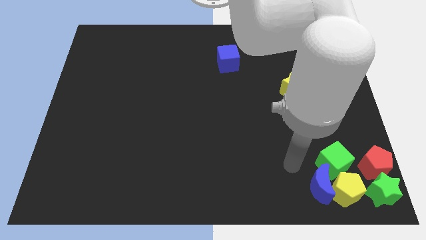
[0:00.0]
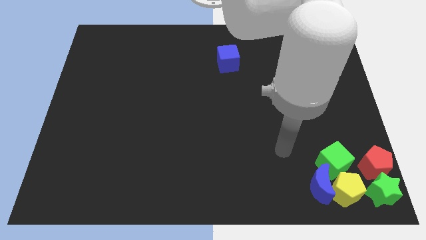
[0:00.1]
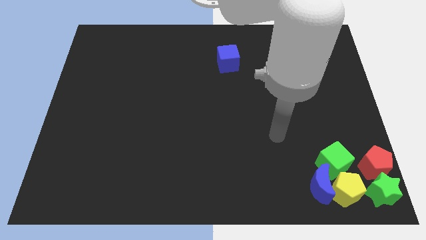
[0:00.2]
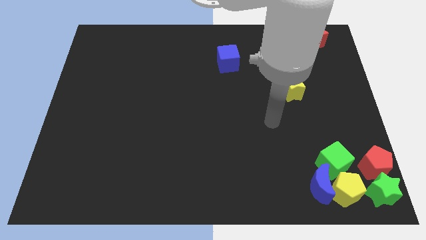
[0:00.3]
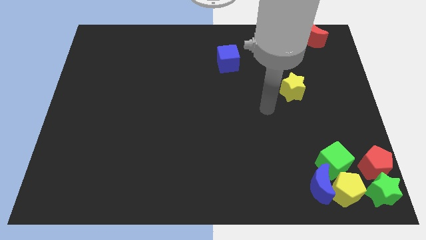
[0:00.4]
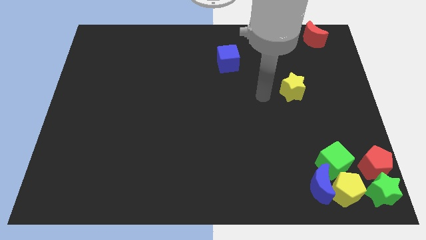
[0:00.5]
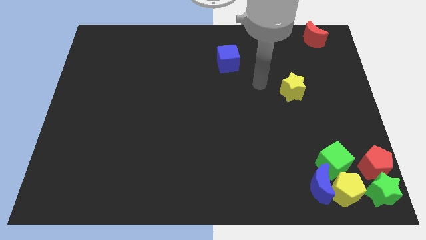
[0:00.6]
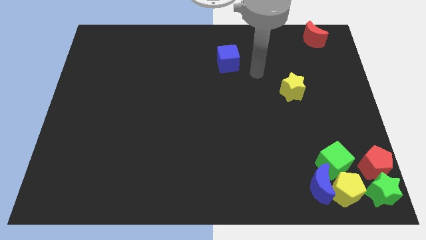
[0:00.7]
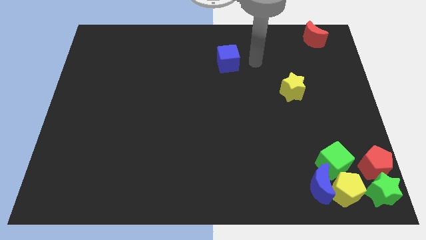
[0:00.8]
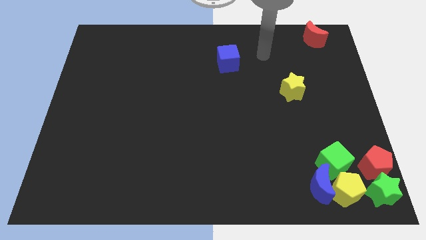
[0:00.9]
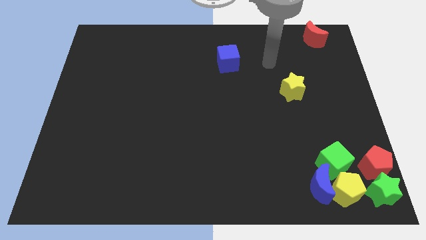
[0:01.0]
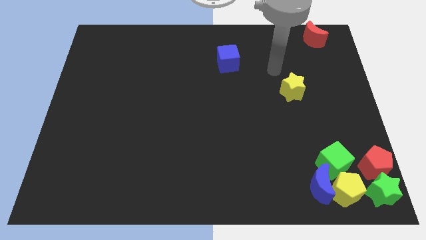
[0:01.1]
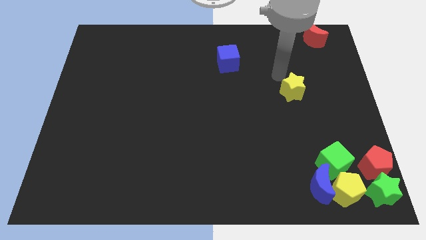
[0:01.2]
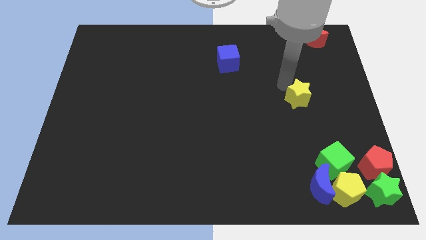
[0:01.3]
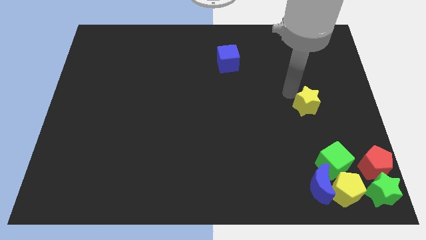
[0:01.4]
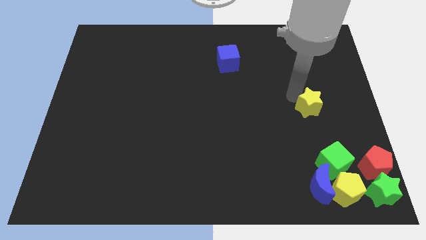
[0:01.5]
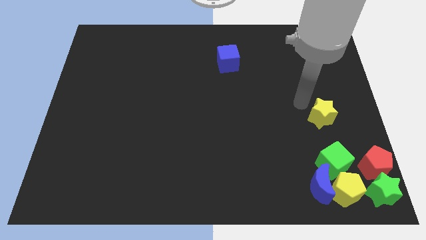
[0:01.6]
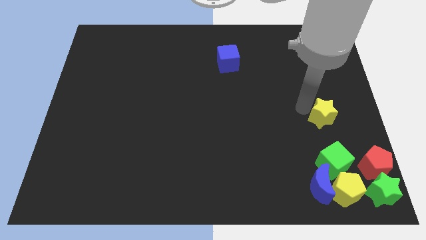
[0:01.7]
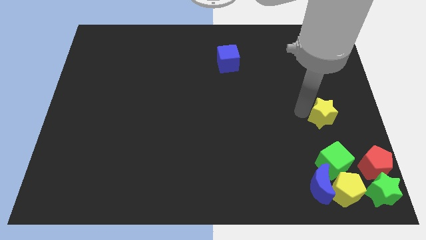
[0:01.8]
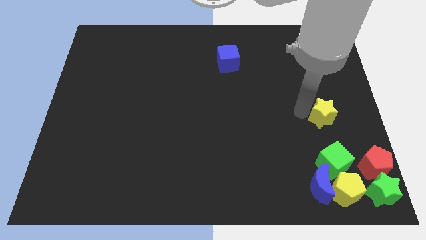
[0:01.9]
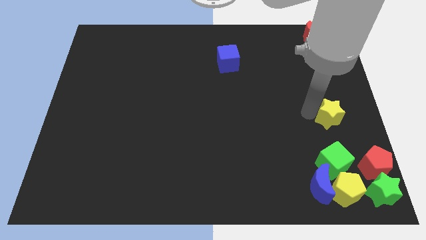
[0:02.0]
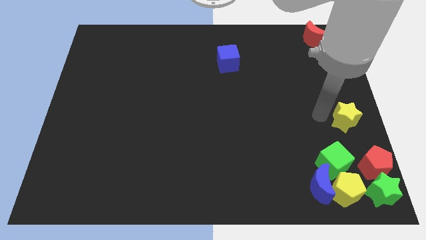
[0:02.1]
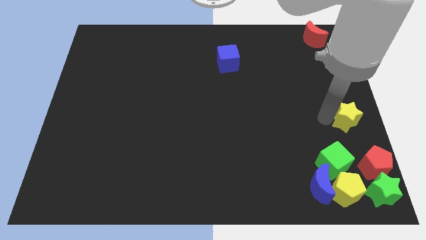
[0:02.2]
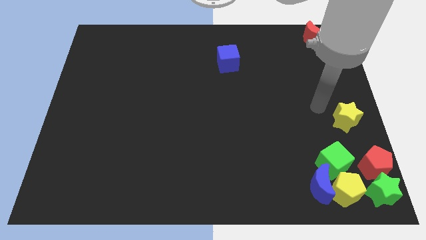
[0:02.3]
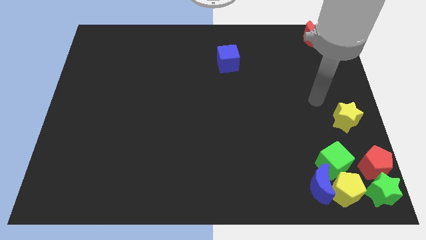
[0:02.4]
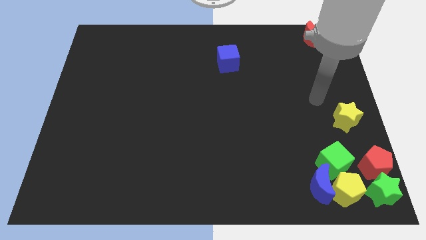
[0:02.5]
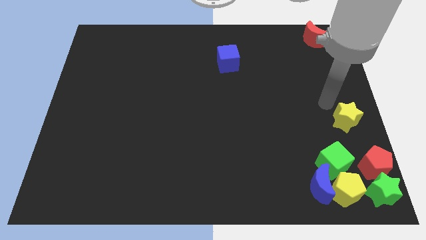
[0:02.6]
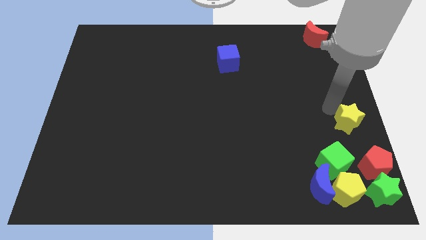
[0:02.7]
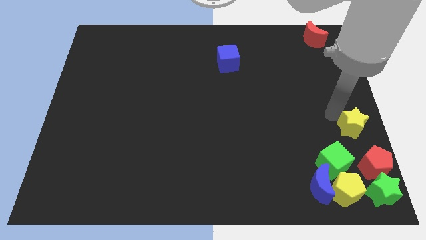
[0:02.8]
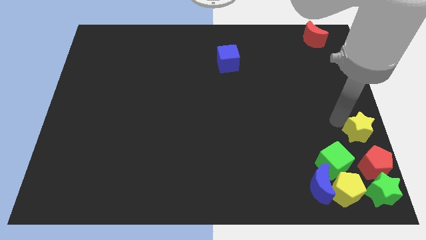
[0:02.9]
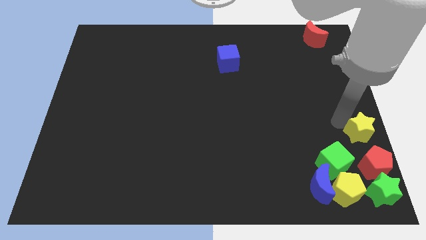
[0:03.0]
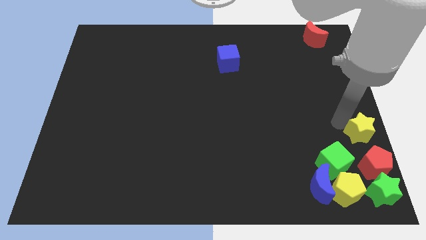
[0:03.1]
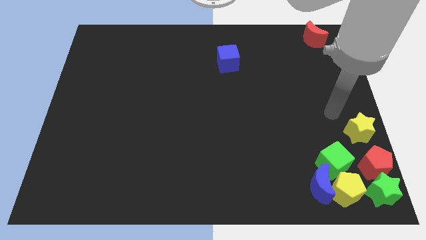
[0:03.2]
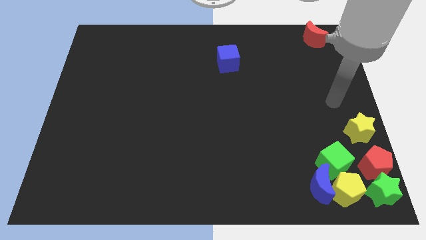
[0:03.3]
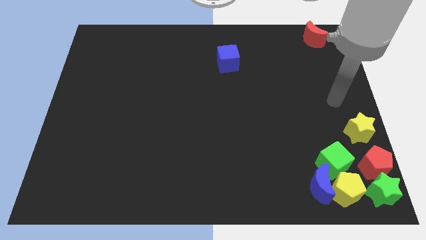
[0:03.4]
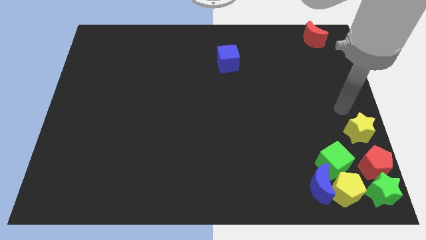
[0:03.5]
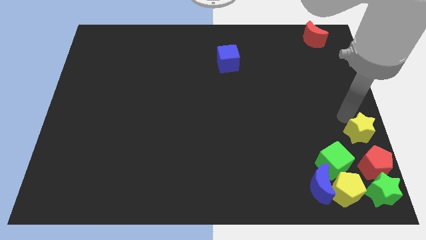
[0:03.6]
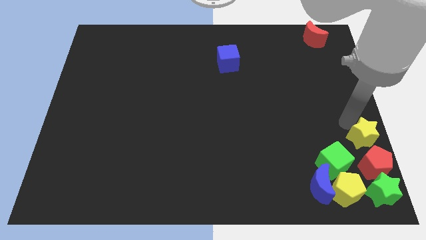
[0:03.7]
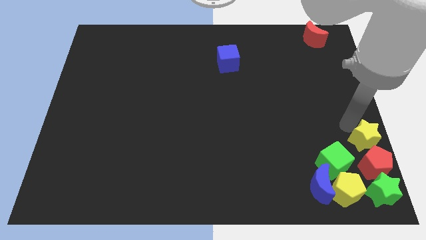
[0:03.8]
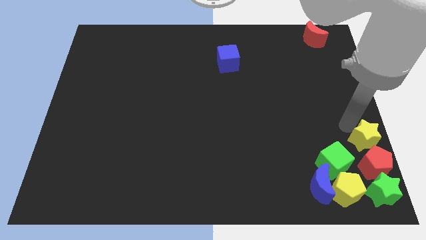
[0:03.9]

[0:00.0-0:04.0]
move the yellow star above the red pentagon

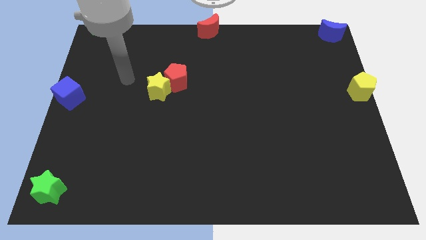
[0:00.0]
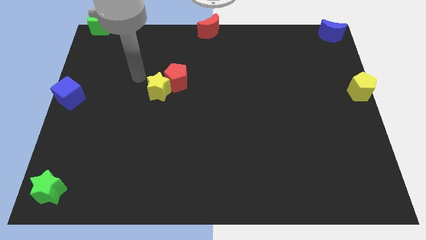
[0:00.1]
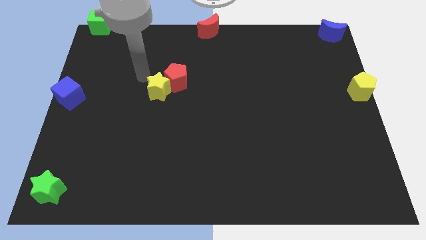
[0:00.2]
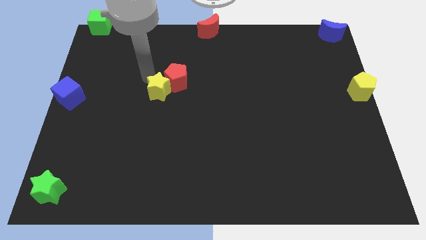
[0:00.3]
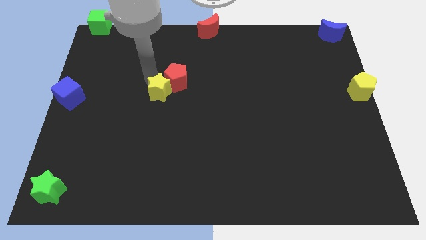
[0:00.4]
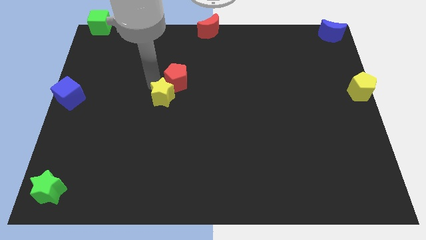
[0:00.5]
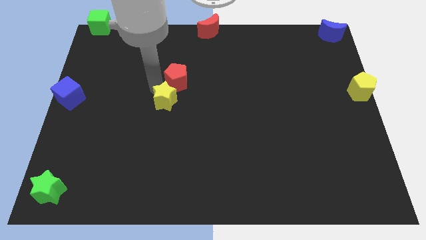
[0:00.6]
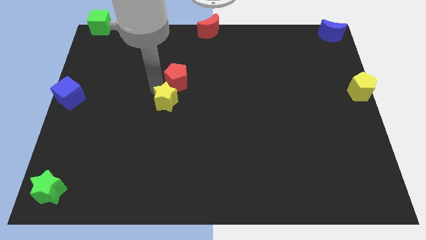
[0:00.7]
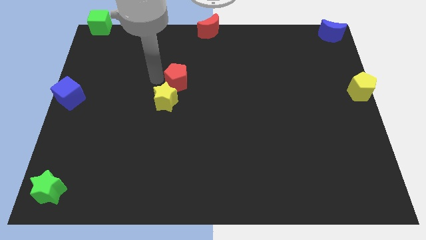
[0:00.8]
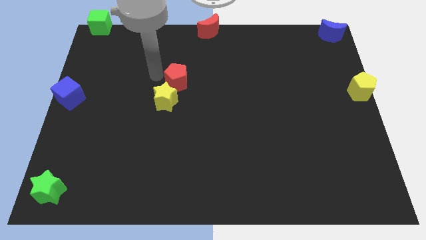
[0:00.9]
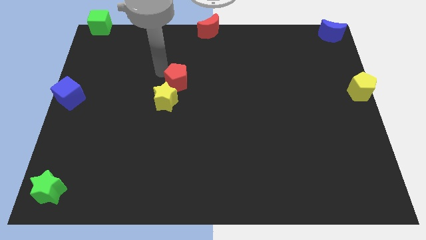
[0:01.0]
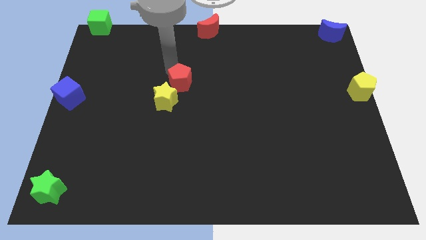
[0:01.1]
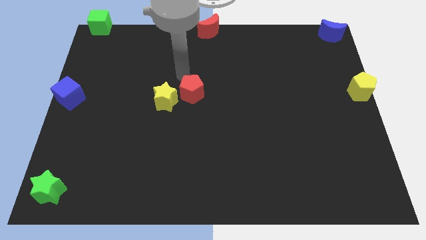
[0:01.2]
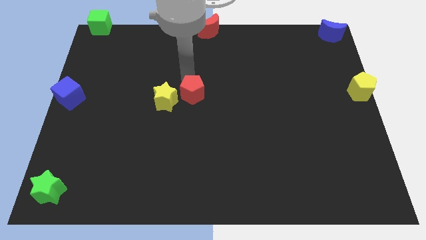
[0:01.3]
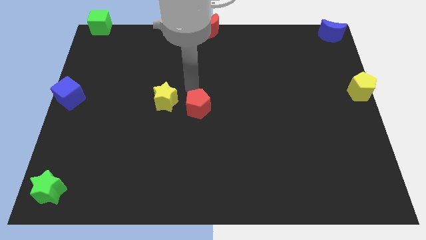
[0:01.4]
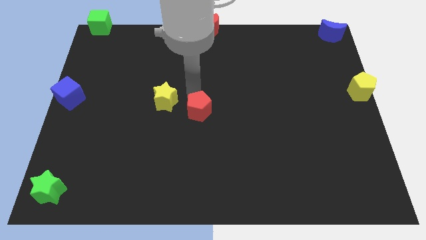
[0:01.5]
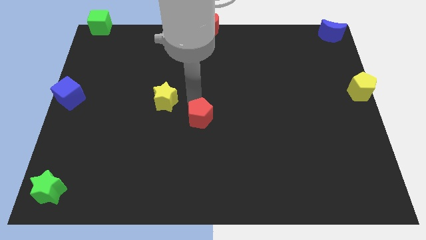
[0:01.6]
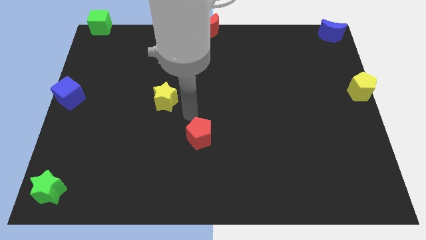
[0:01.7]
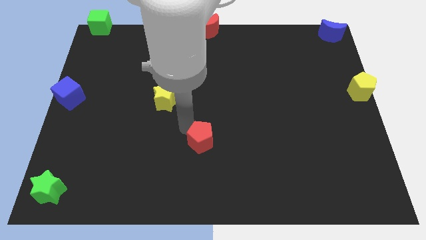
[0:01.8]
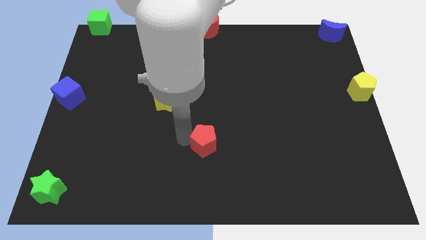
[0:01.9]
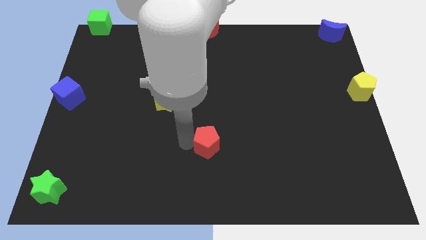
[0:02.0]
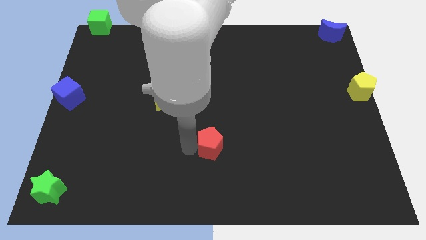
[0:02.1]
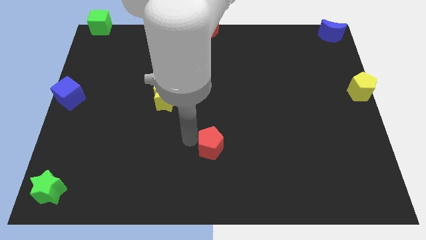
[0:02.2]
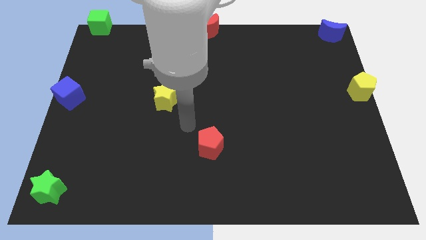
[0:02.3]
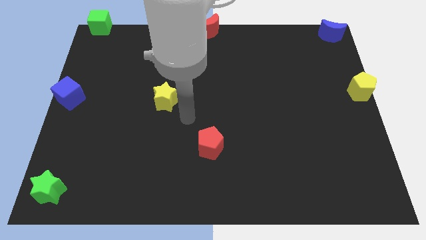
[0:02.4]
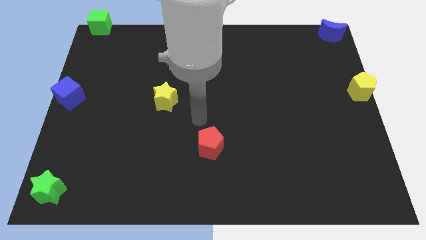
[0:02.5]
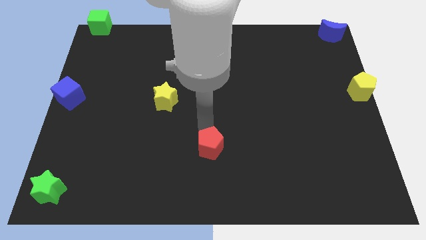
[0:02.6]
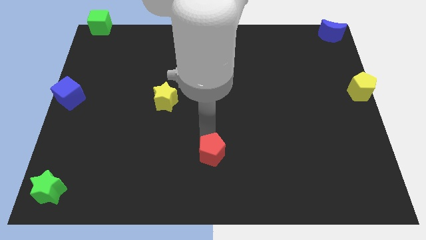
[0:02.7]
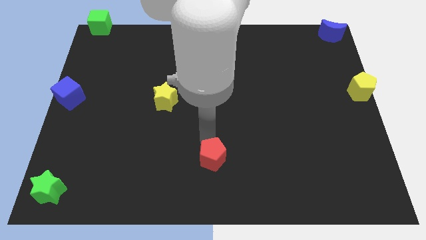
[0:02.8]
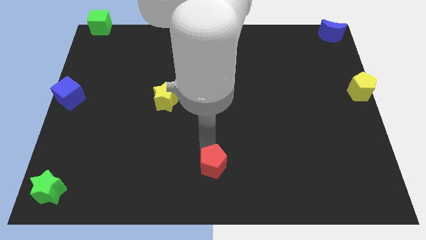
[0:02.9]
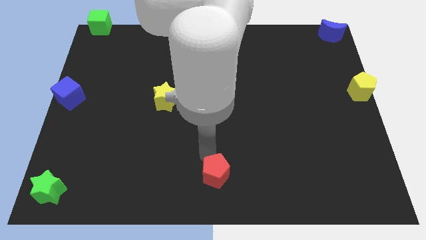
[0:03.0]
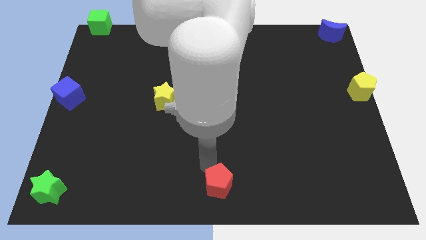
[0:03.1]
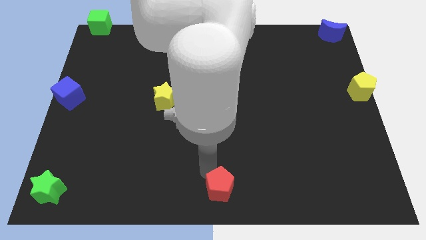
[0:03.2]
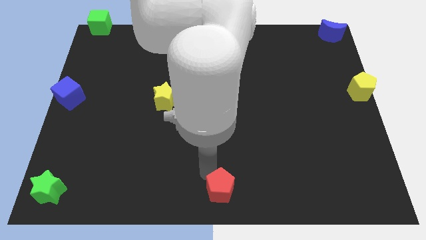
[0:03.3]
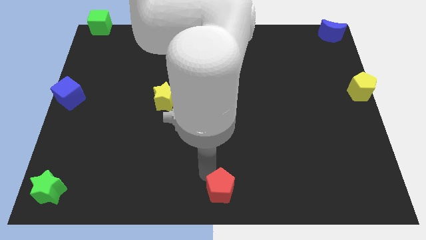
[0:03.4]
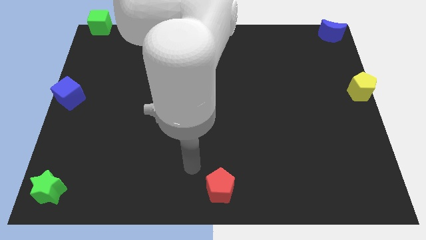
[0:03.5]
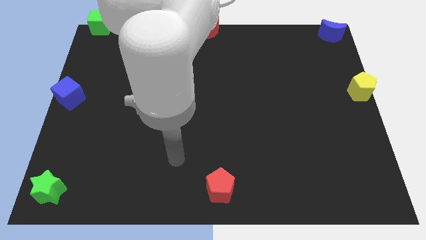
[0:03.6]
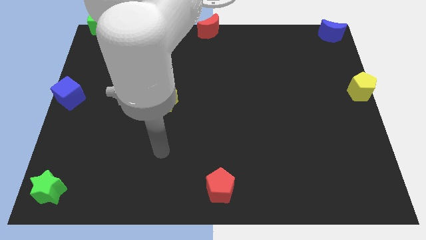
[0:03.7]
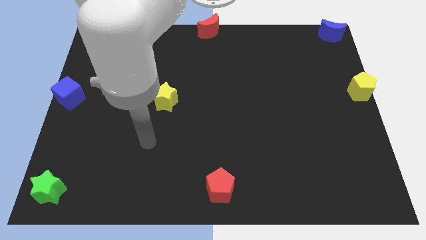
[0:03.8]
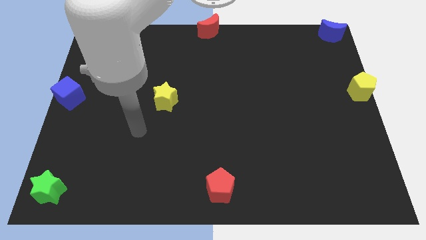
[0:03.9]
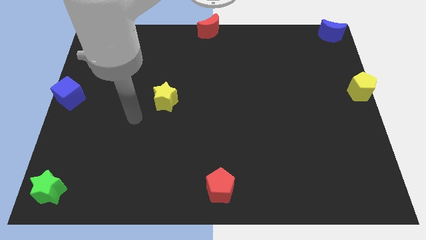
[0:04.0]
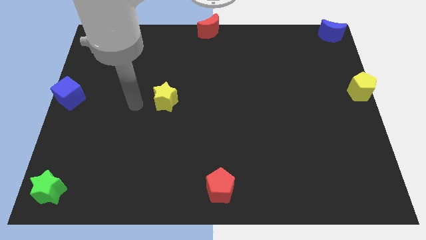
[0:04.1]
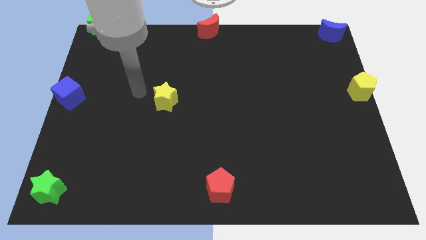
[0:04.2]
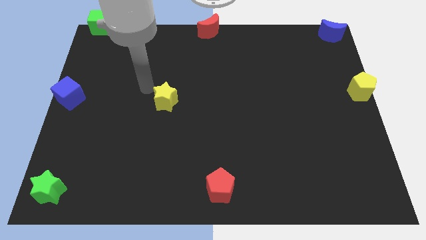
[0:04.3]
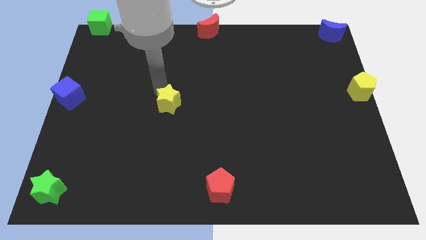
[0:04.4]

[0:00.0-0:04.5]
place the red pentagon vertically below the red crescent

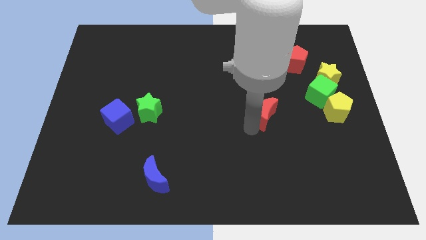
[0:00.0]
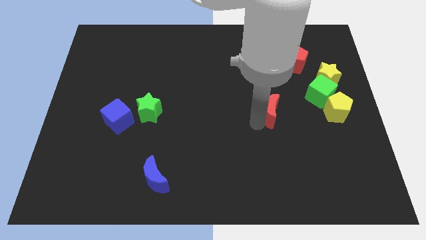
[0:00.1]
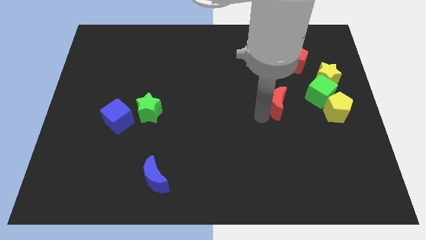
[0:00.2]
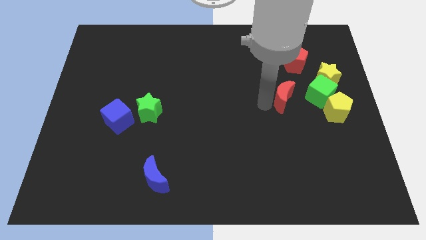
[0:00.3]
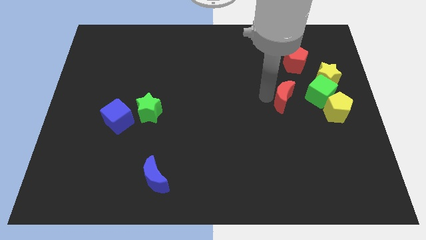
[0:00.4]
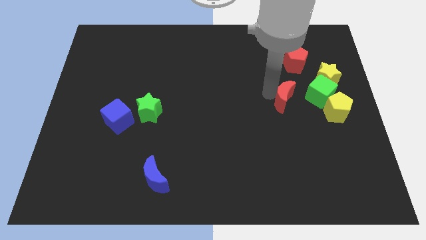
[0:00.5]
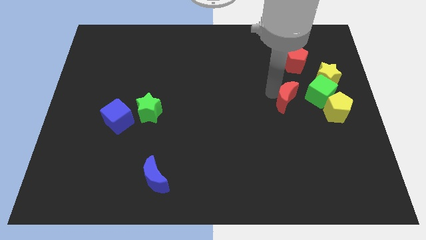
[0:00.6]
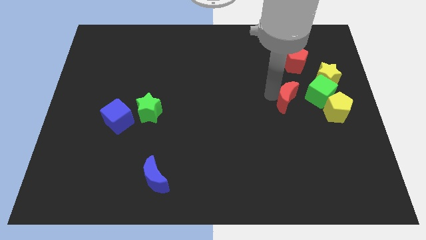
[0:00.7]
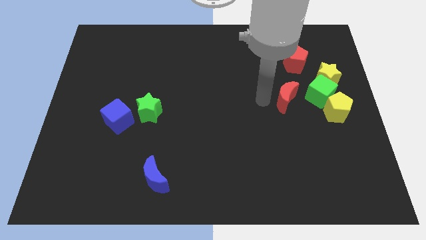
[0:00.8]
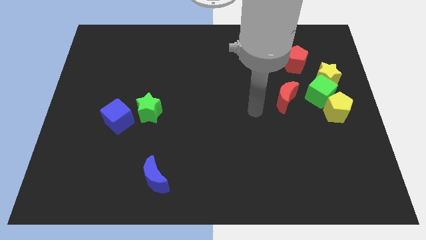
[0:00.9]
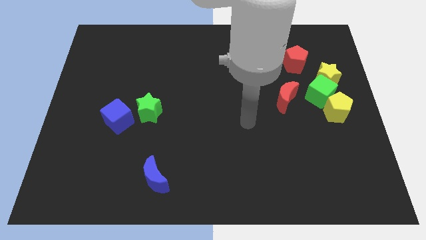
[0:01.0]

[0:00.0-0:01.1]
move the red crescent to the left side of the green cube
